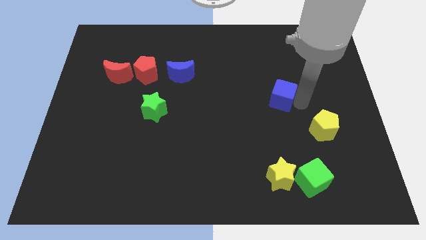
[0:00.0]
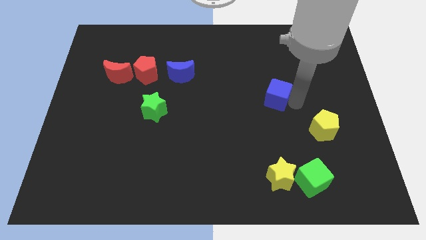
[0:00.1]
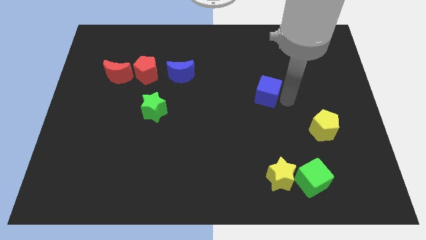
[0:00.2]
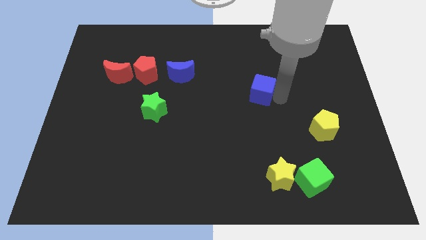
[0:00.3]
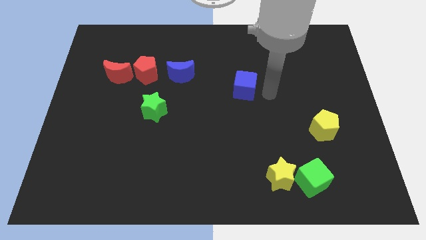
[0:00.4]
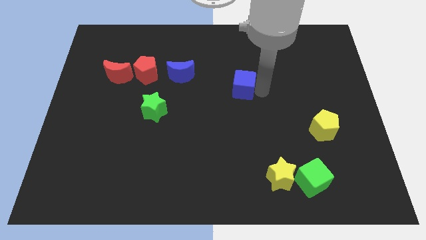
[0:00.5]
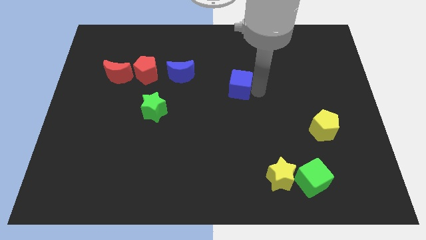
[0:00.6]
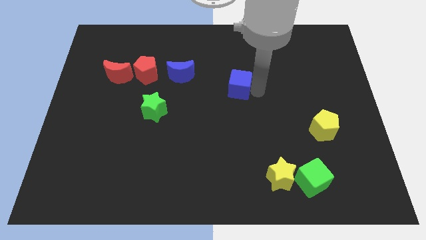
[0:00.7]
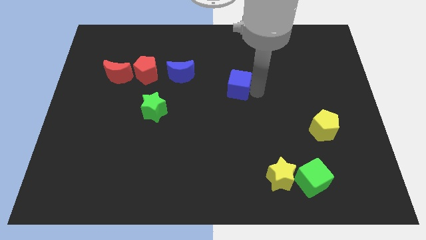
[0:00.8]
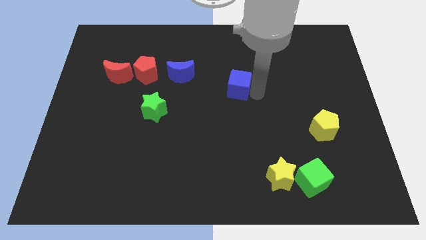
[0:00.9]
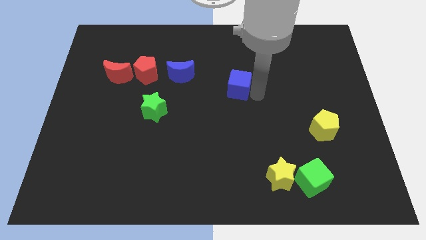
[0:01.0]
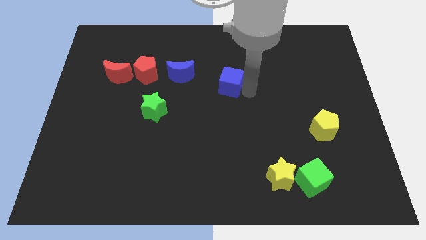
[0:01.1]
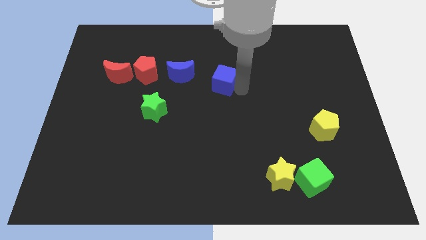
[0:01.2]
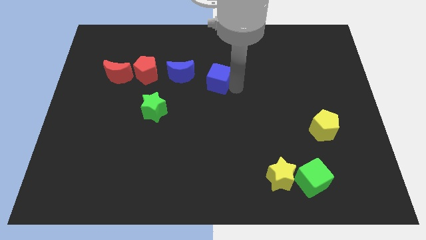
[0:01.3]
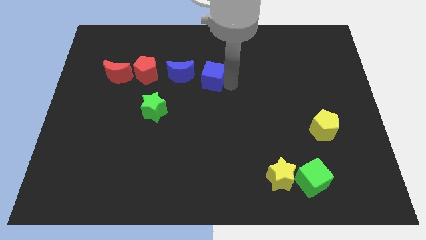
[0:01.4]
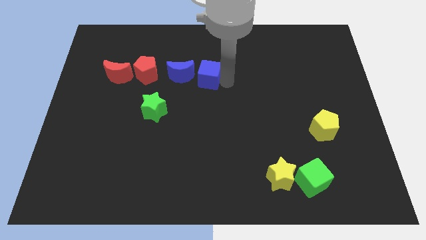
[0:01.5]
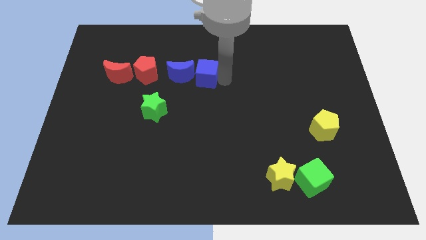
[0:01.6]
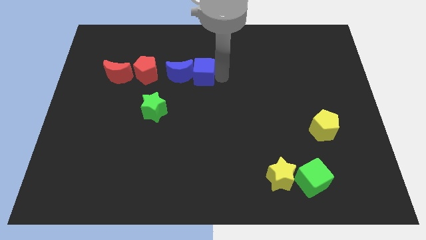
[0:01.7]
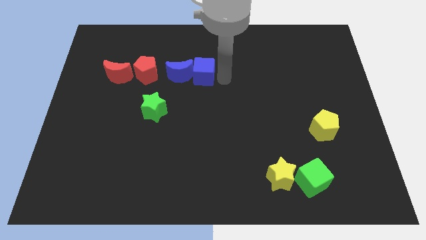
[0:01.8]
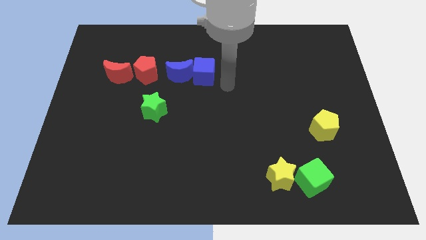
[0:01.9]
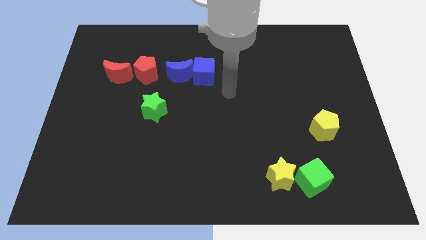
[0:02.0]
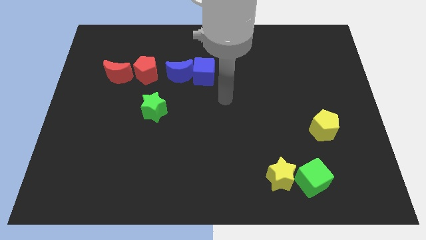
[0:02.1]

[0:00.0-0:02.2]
move the blue cube into the blue moon

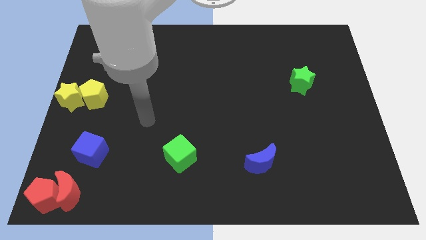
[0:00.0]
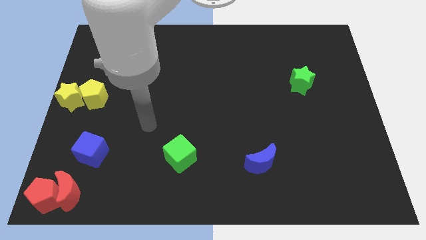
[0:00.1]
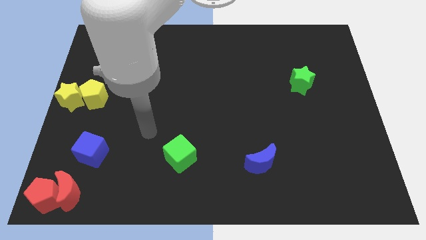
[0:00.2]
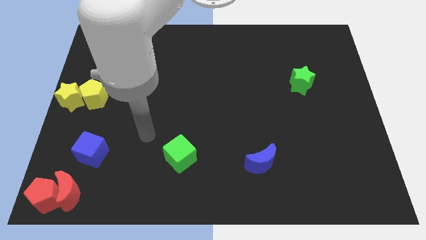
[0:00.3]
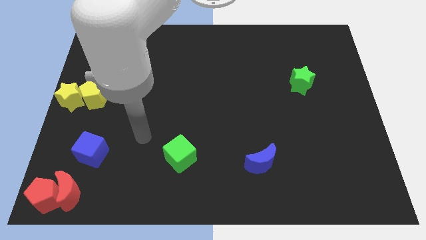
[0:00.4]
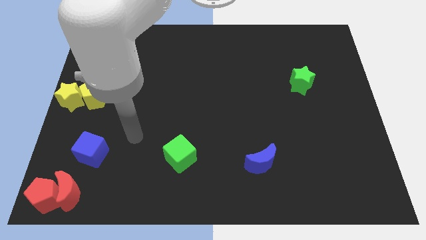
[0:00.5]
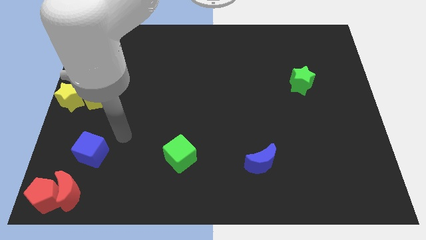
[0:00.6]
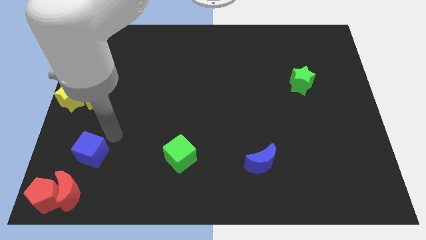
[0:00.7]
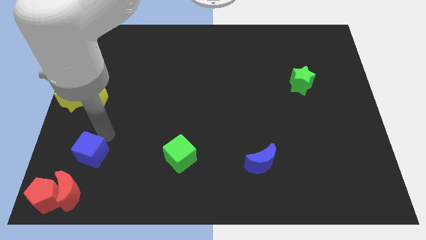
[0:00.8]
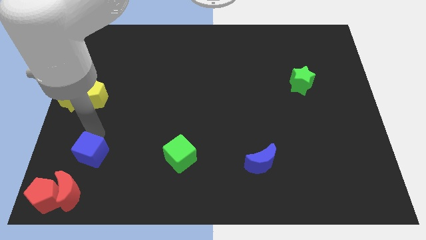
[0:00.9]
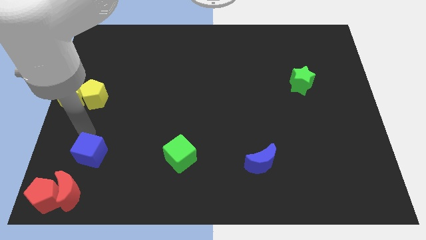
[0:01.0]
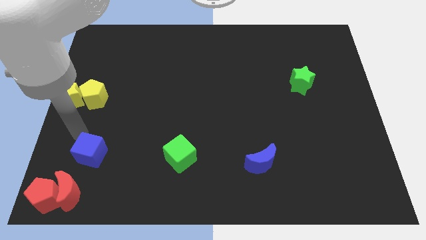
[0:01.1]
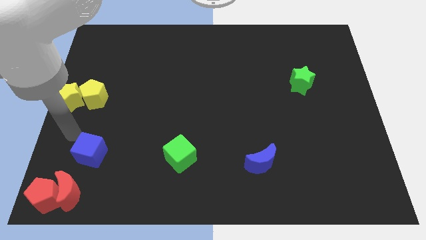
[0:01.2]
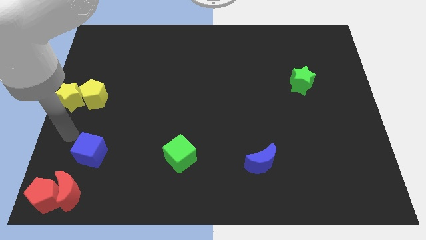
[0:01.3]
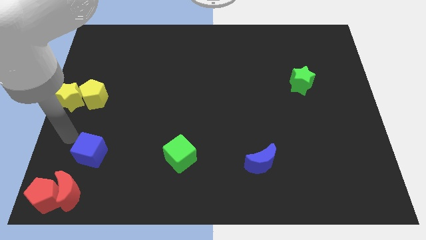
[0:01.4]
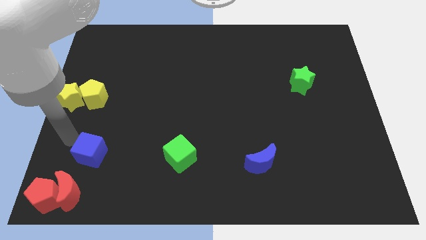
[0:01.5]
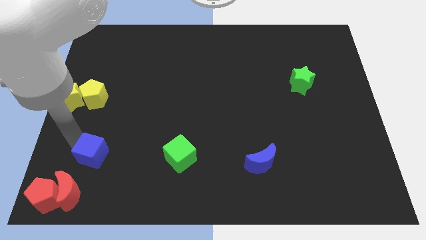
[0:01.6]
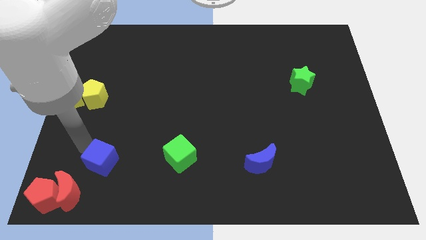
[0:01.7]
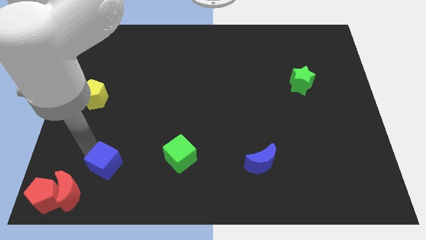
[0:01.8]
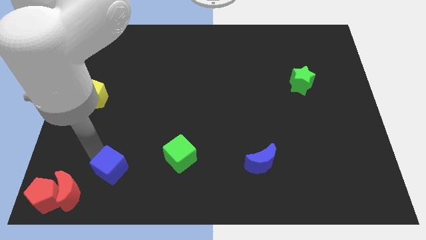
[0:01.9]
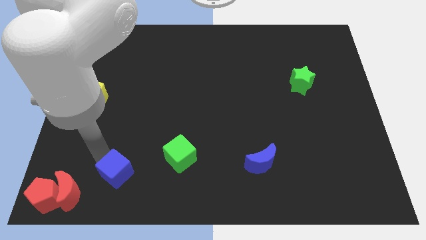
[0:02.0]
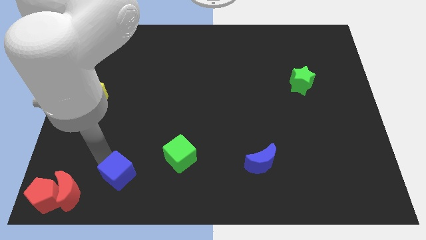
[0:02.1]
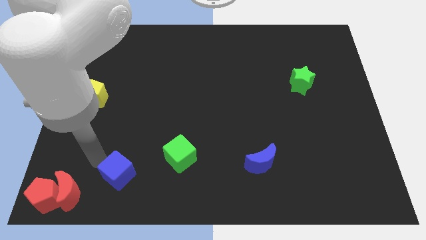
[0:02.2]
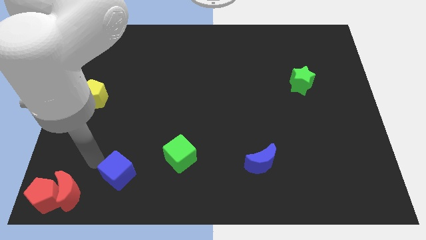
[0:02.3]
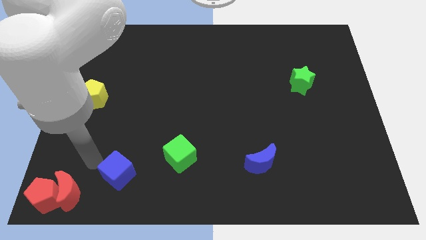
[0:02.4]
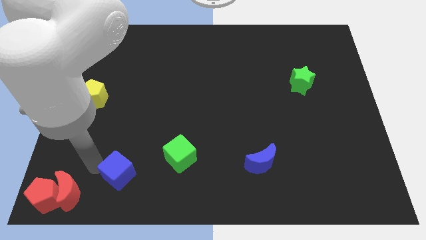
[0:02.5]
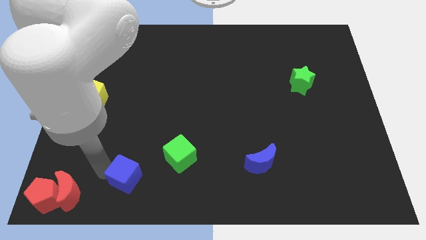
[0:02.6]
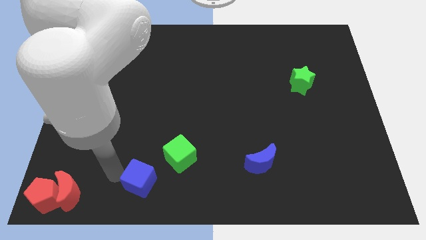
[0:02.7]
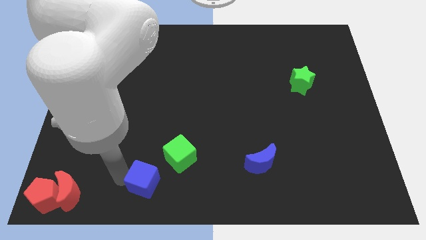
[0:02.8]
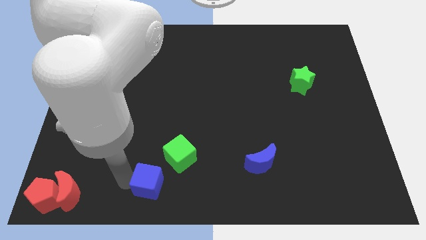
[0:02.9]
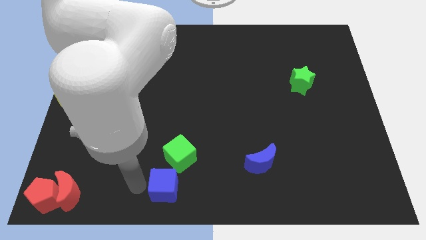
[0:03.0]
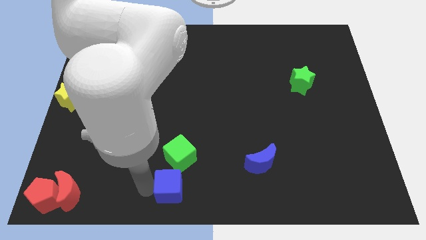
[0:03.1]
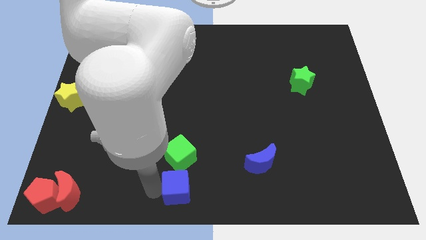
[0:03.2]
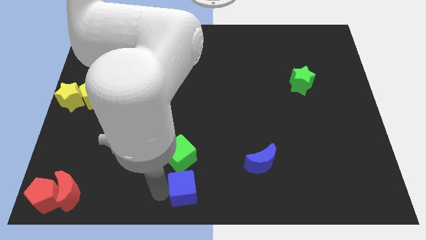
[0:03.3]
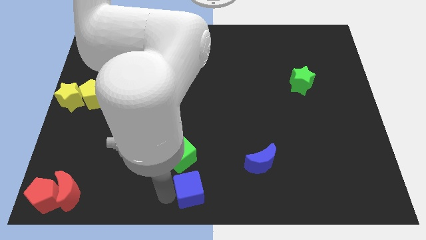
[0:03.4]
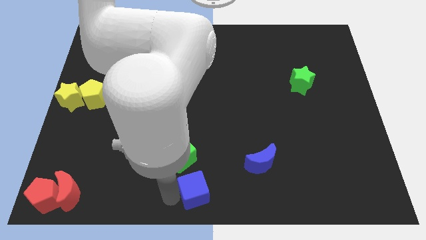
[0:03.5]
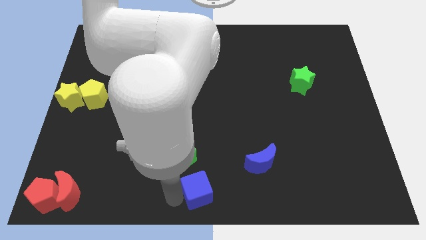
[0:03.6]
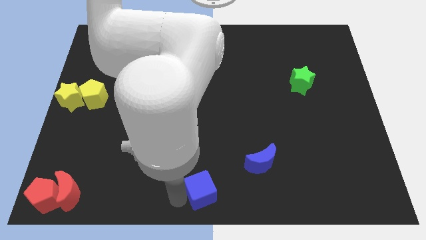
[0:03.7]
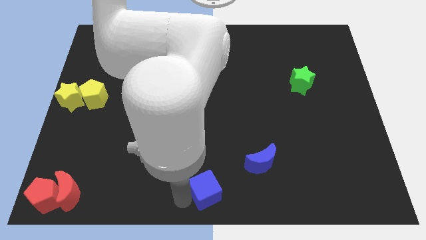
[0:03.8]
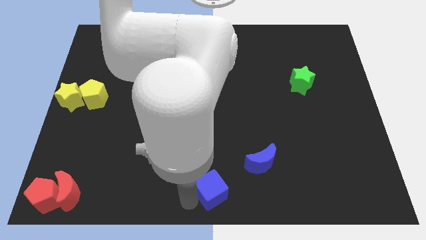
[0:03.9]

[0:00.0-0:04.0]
push the blue cube to the bottom center of the board

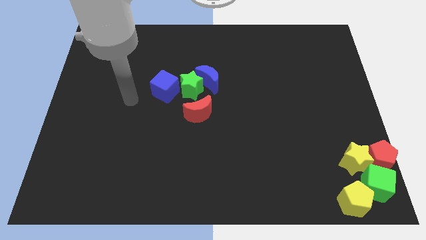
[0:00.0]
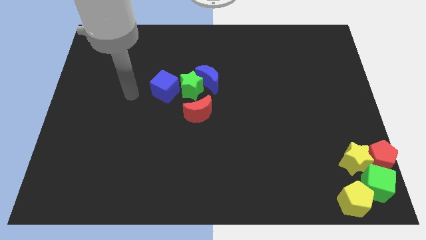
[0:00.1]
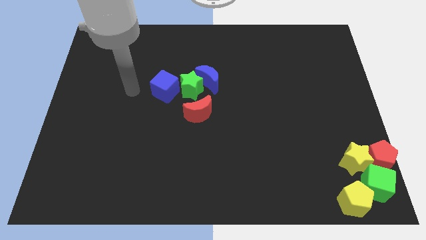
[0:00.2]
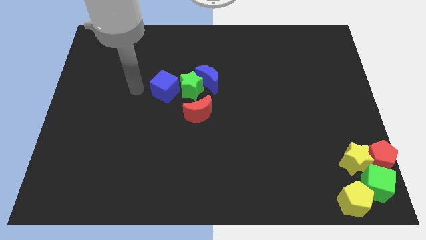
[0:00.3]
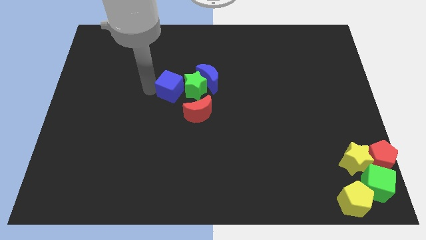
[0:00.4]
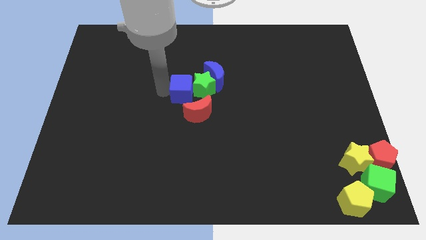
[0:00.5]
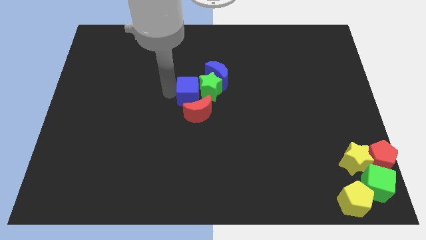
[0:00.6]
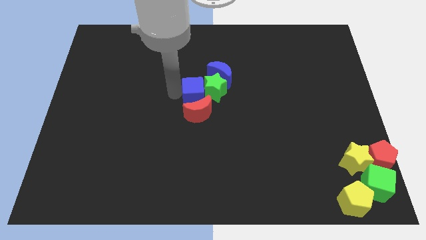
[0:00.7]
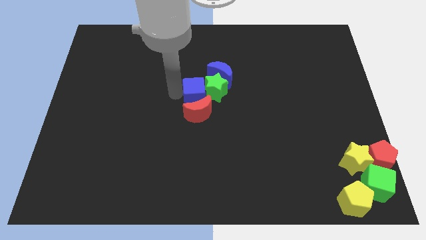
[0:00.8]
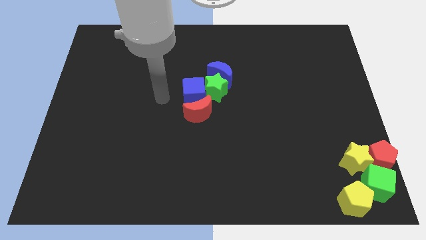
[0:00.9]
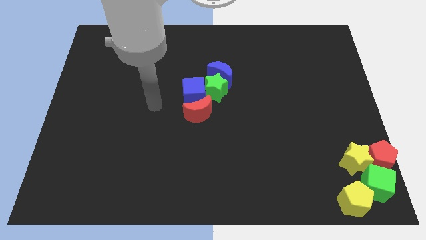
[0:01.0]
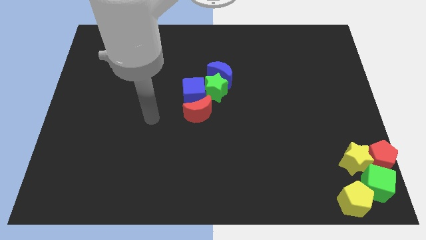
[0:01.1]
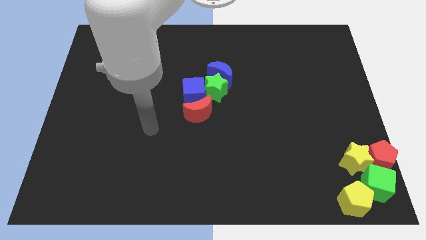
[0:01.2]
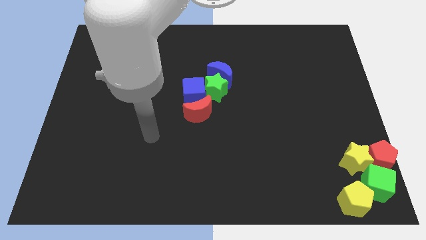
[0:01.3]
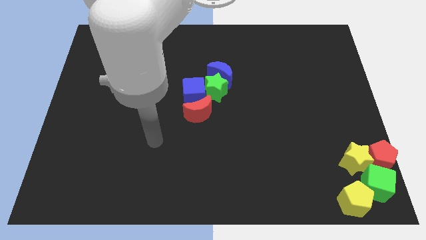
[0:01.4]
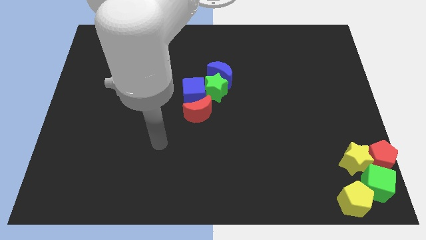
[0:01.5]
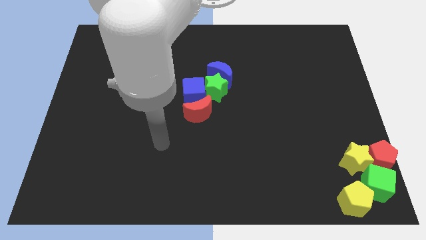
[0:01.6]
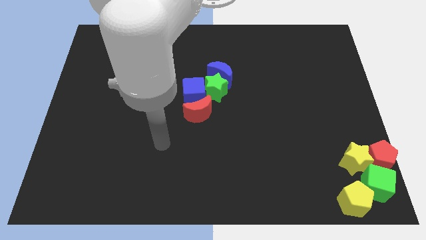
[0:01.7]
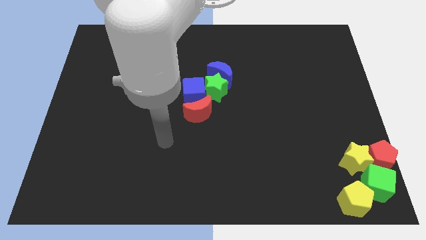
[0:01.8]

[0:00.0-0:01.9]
push green star and blue cube slightly right

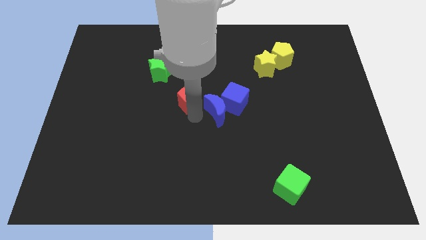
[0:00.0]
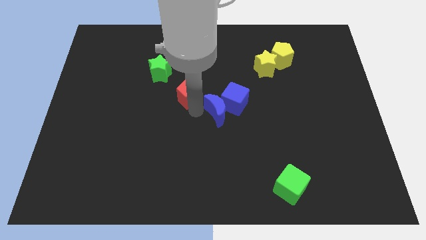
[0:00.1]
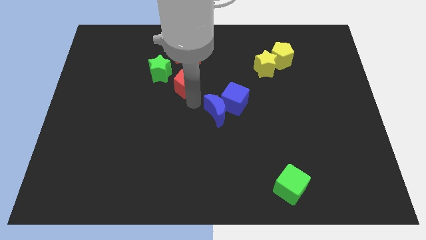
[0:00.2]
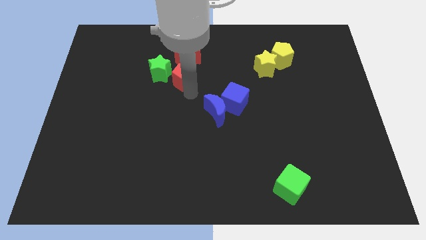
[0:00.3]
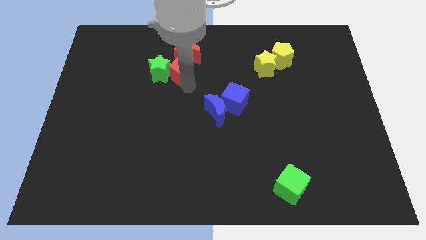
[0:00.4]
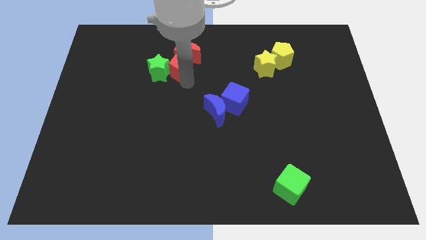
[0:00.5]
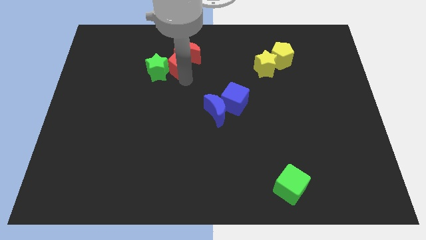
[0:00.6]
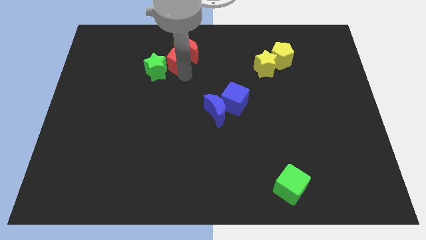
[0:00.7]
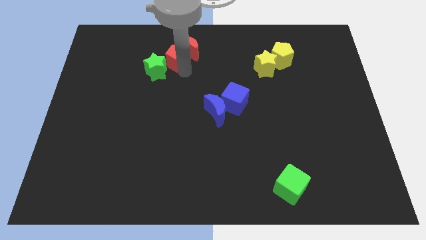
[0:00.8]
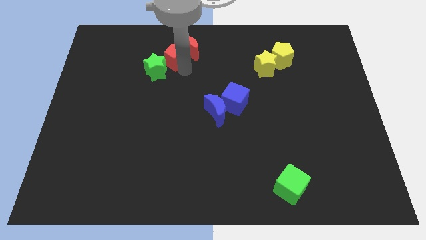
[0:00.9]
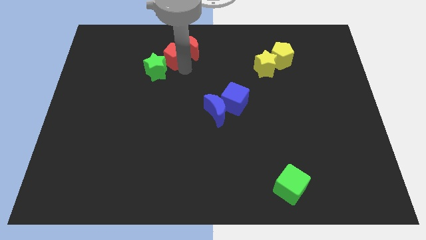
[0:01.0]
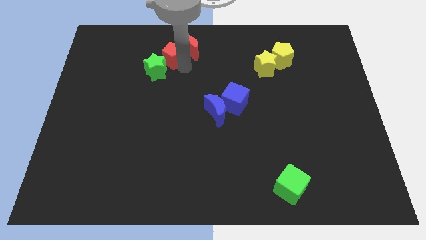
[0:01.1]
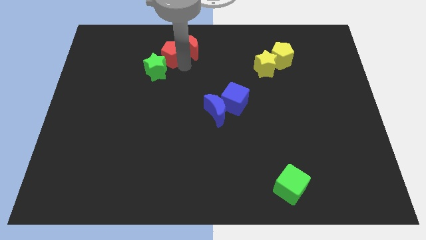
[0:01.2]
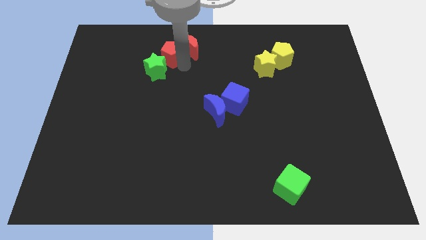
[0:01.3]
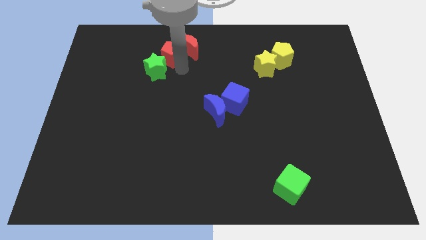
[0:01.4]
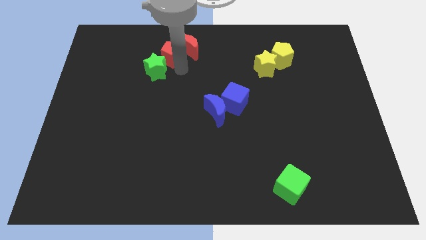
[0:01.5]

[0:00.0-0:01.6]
push the red pentagon between green star and red crescent
